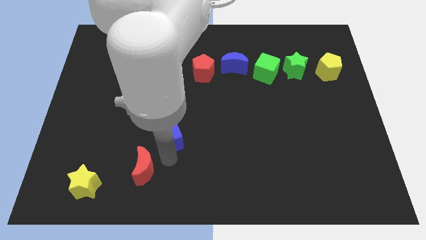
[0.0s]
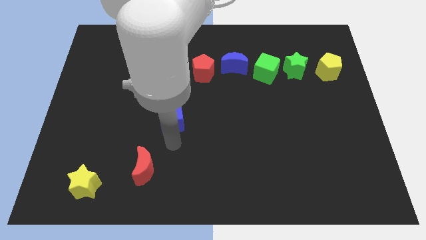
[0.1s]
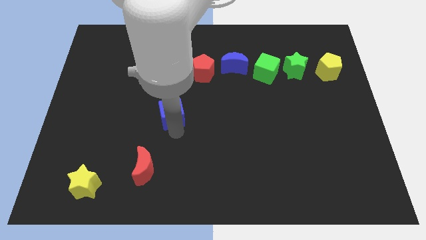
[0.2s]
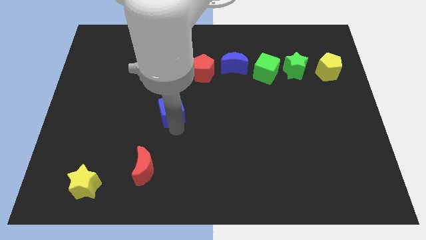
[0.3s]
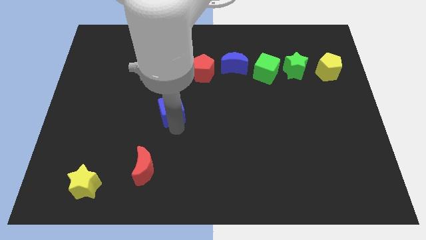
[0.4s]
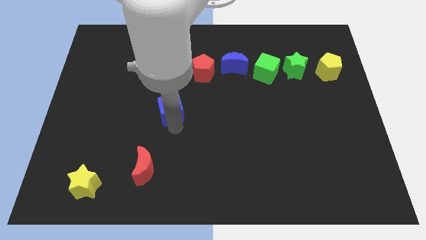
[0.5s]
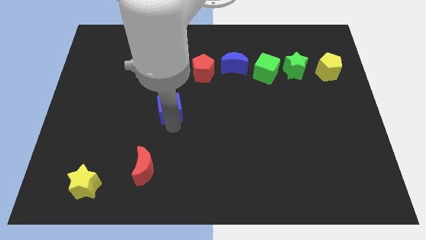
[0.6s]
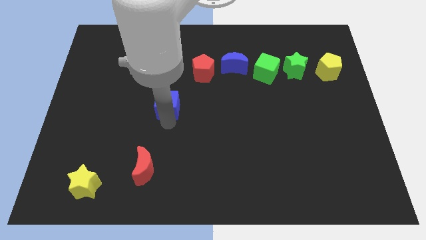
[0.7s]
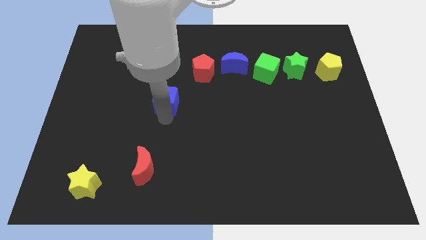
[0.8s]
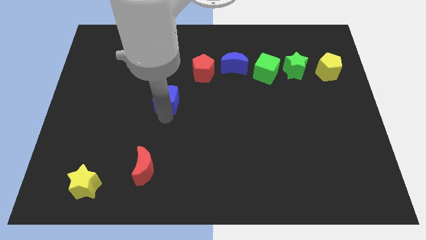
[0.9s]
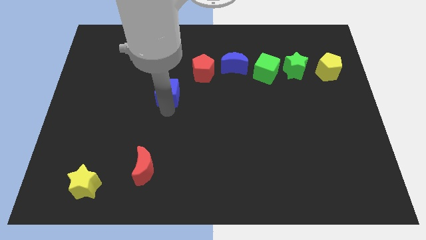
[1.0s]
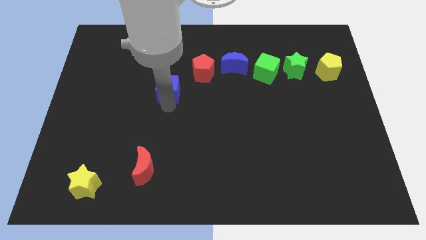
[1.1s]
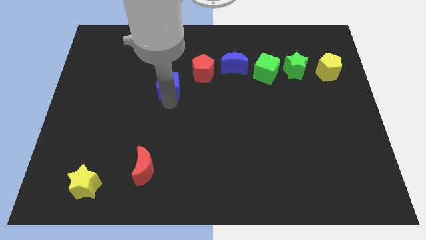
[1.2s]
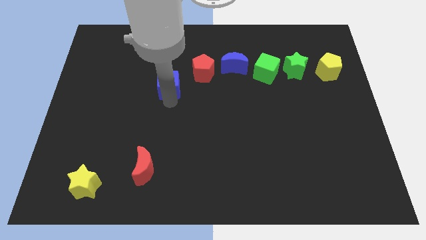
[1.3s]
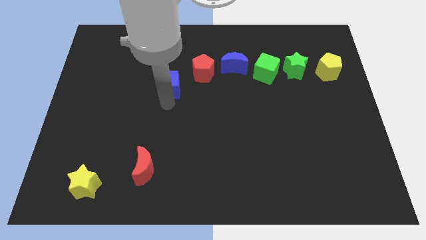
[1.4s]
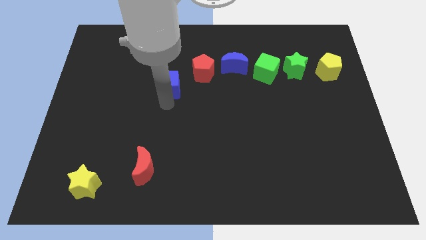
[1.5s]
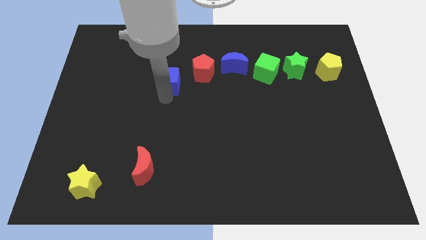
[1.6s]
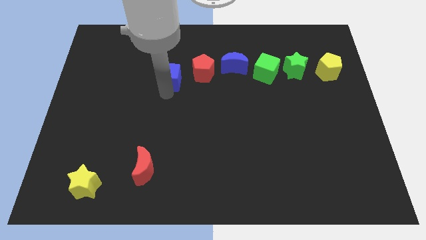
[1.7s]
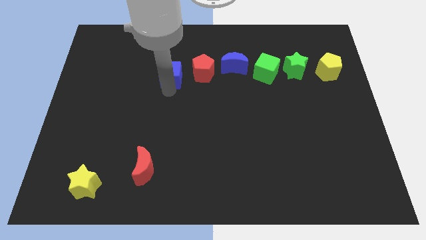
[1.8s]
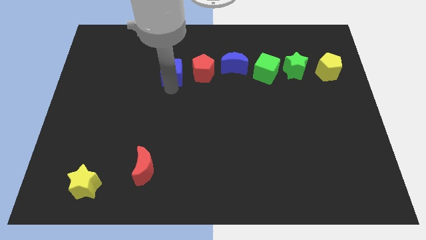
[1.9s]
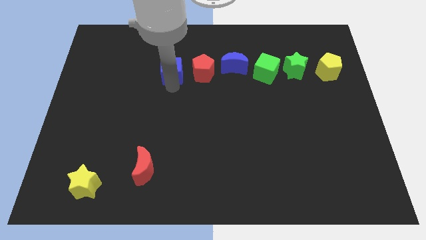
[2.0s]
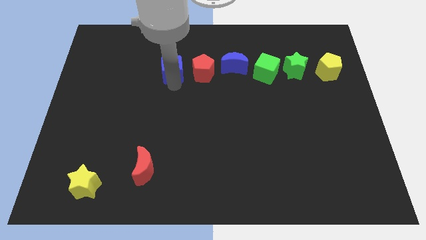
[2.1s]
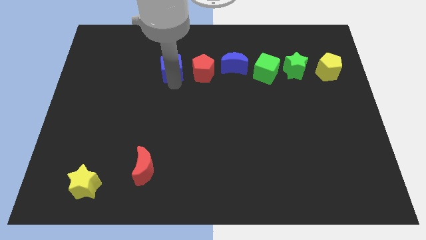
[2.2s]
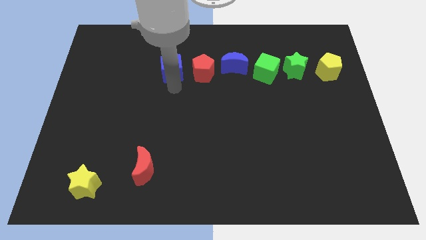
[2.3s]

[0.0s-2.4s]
move the blue cube to the left of the red pentagon

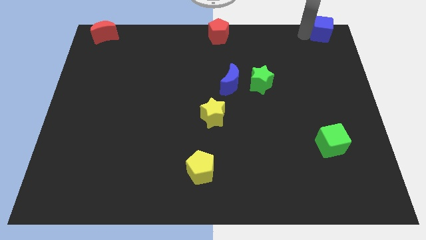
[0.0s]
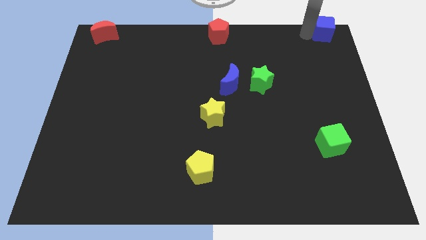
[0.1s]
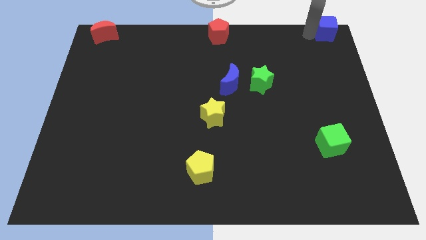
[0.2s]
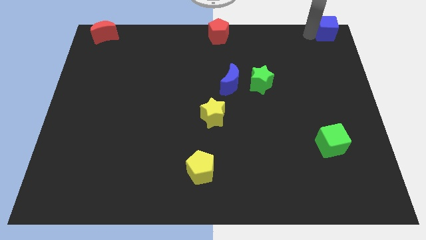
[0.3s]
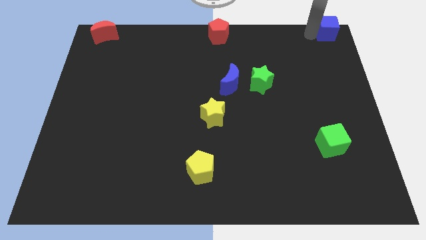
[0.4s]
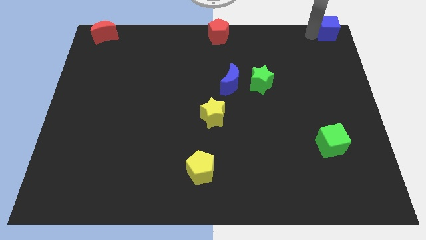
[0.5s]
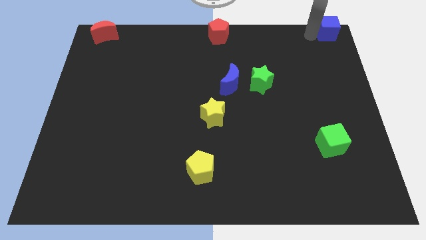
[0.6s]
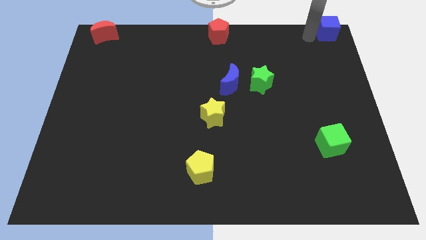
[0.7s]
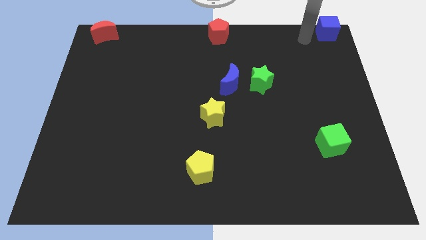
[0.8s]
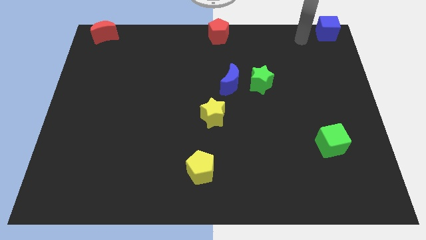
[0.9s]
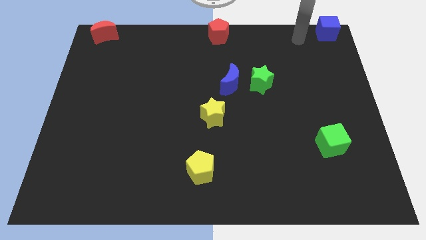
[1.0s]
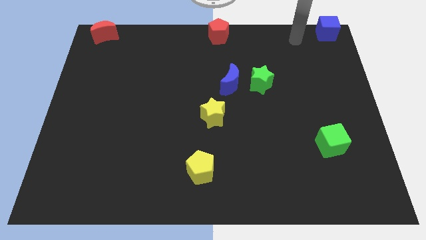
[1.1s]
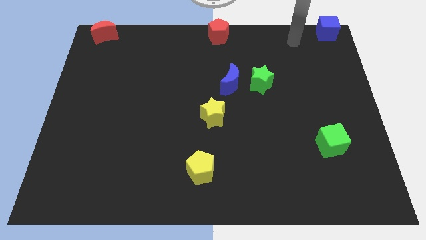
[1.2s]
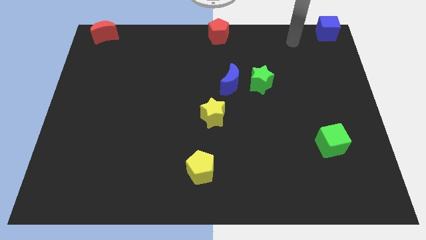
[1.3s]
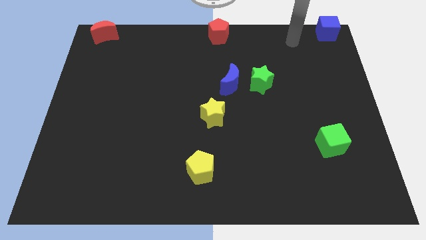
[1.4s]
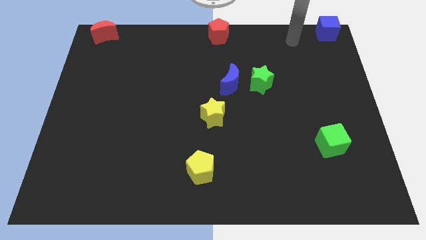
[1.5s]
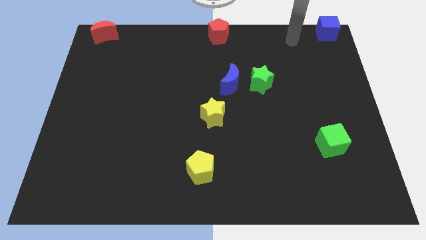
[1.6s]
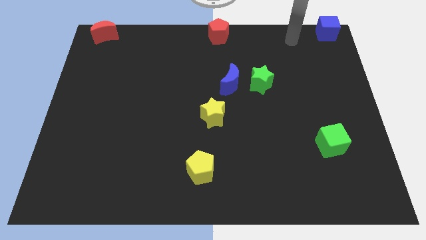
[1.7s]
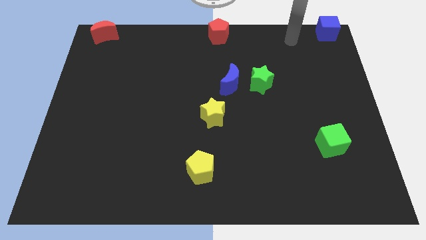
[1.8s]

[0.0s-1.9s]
move the blue cube to the top right corner of the board

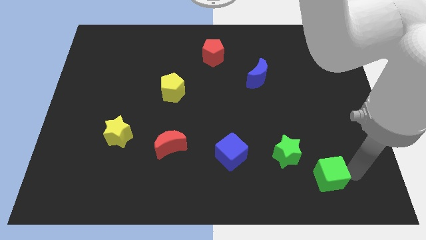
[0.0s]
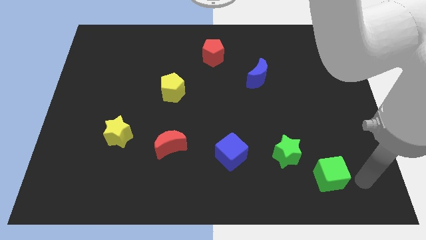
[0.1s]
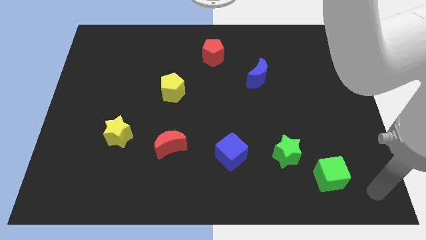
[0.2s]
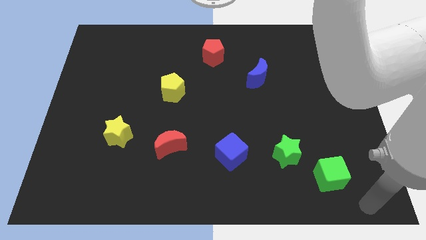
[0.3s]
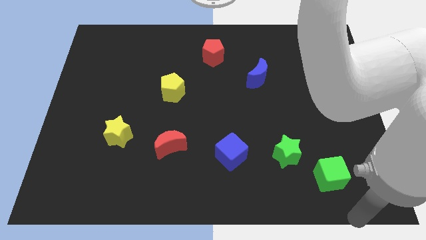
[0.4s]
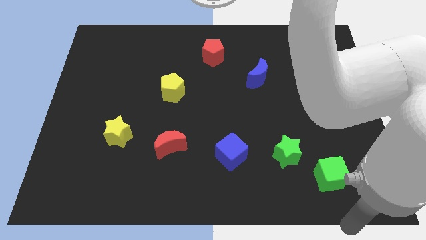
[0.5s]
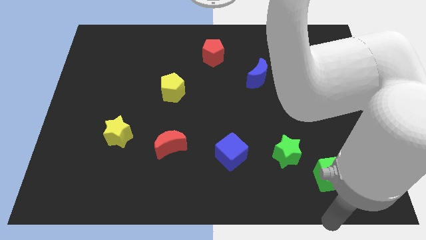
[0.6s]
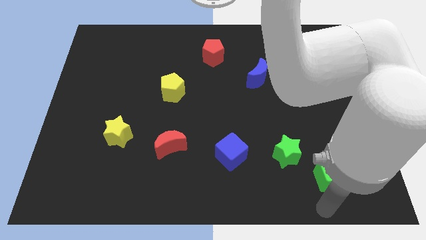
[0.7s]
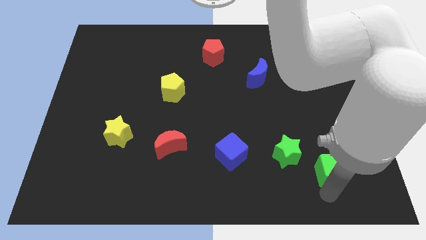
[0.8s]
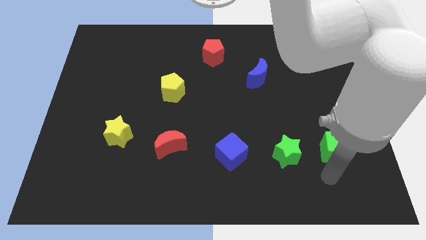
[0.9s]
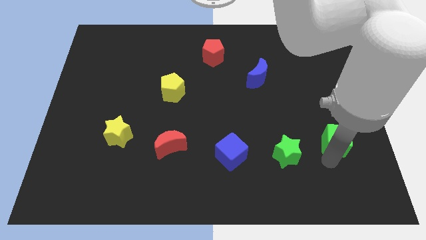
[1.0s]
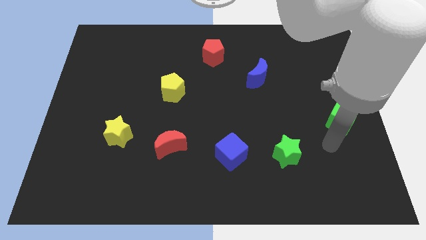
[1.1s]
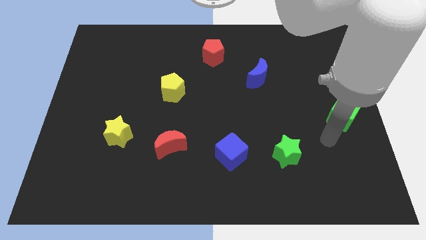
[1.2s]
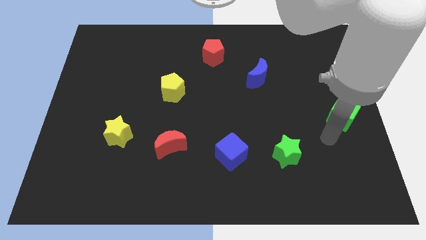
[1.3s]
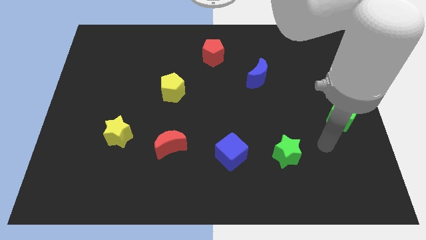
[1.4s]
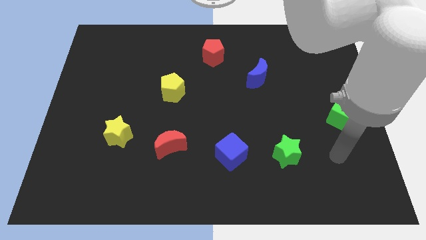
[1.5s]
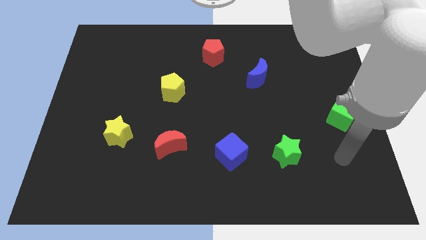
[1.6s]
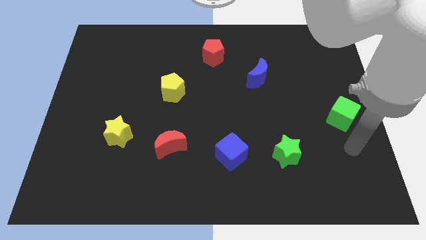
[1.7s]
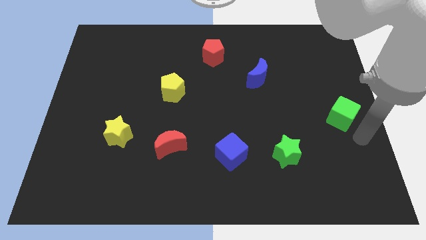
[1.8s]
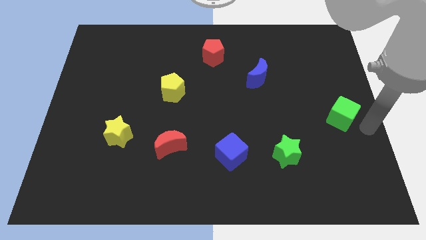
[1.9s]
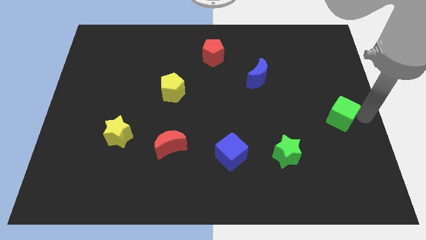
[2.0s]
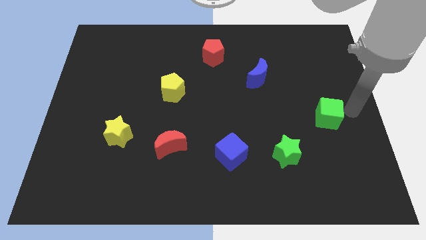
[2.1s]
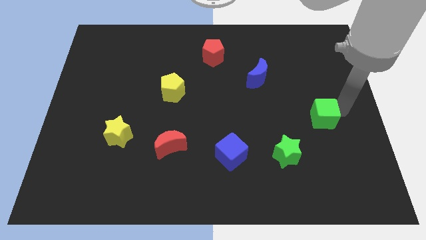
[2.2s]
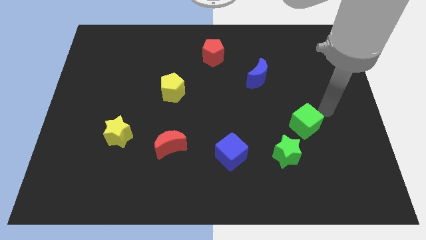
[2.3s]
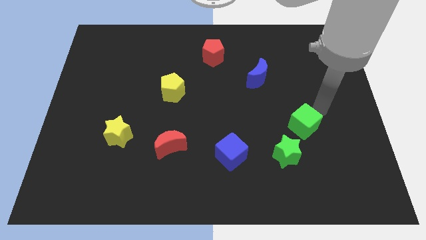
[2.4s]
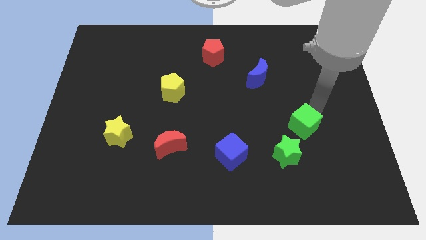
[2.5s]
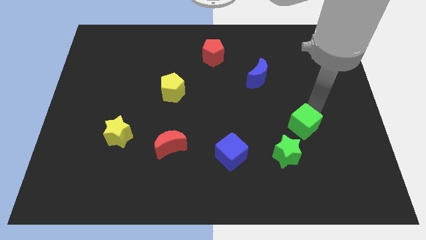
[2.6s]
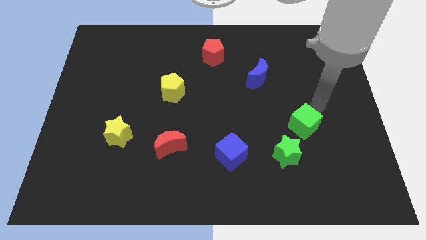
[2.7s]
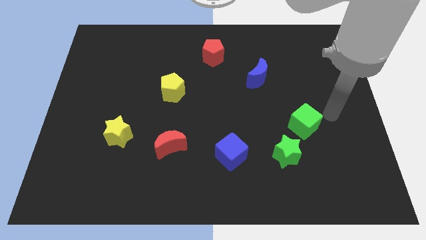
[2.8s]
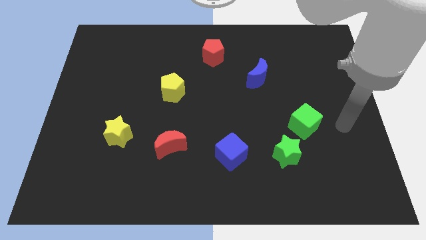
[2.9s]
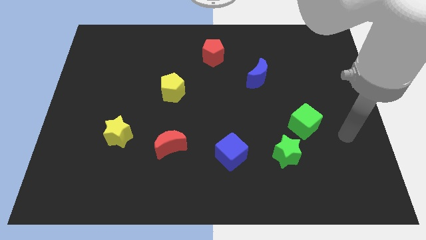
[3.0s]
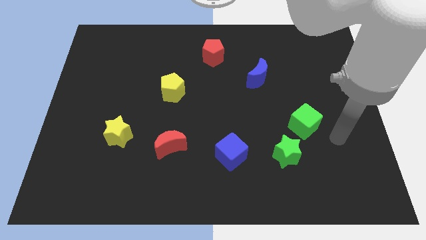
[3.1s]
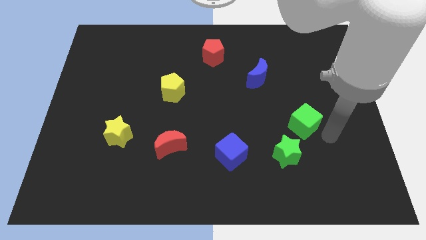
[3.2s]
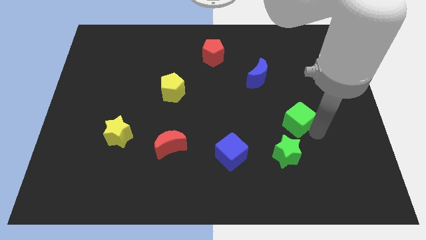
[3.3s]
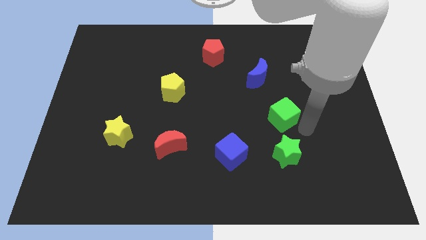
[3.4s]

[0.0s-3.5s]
put the green cube above the green star

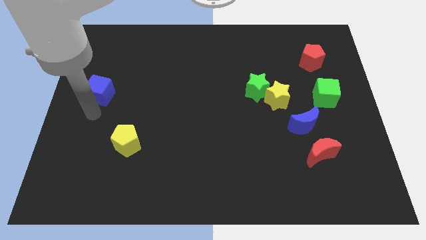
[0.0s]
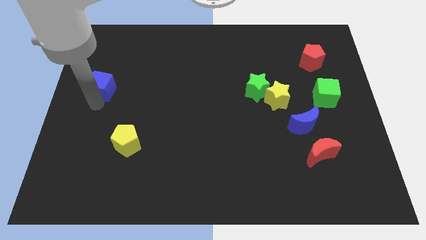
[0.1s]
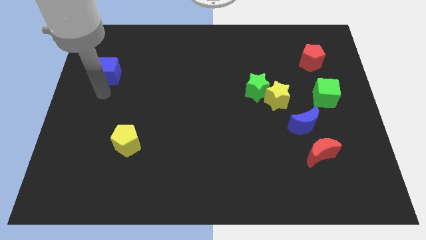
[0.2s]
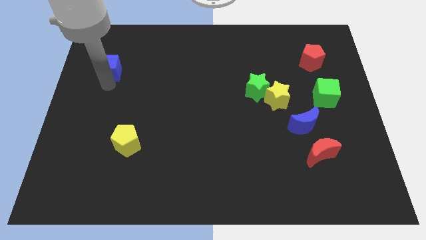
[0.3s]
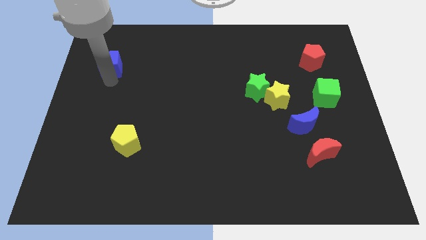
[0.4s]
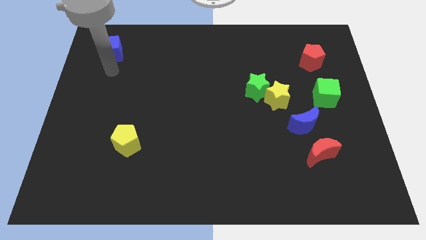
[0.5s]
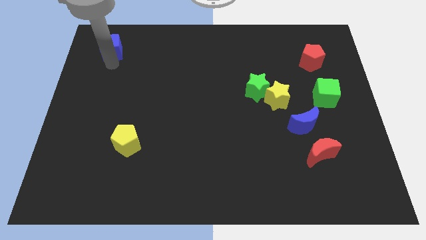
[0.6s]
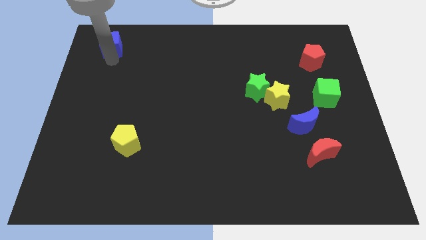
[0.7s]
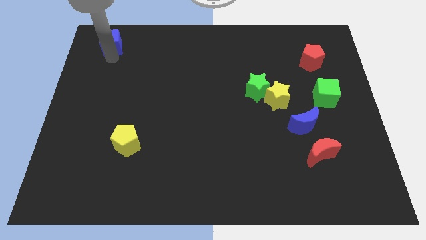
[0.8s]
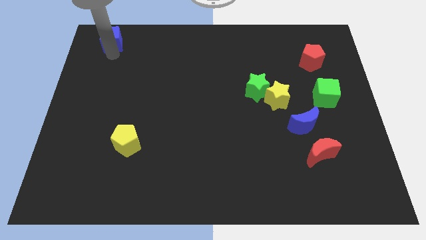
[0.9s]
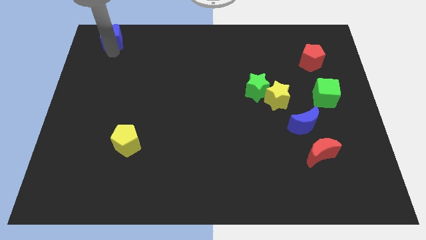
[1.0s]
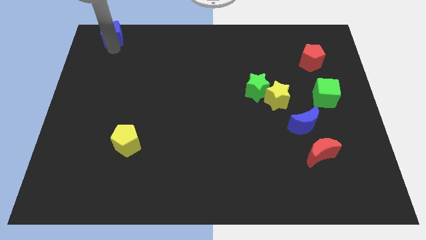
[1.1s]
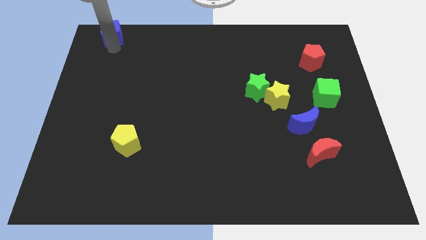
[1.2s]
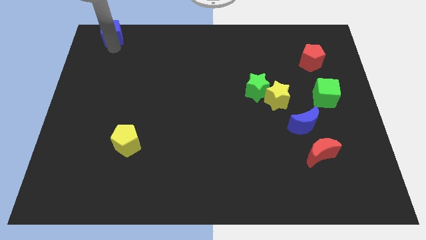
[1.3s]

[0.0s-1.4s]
place blue cube on top left of the board

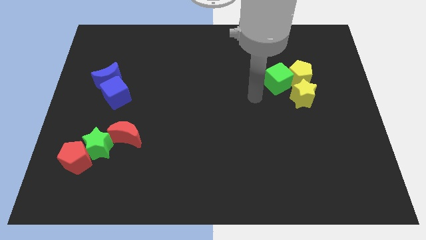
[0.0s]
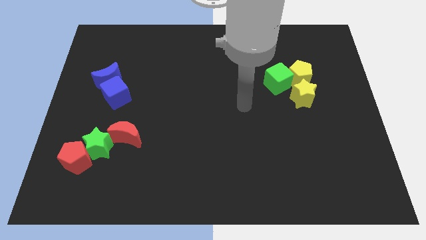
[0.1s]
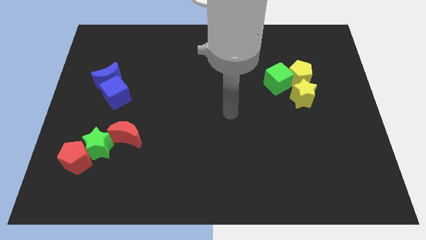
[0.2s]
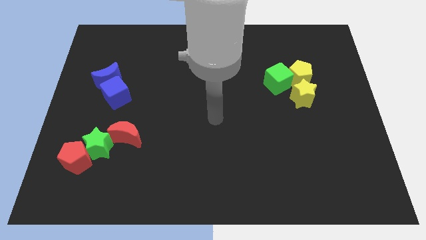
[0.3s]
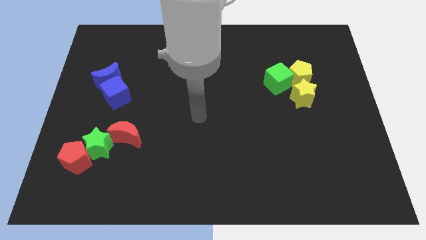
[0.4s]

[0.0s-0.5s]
move your arm away from the green cube
